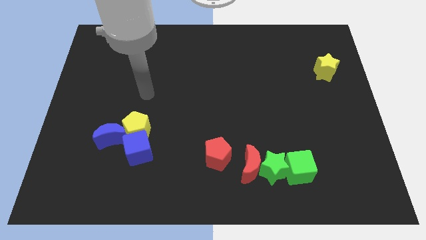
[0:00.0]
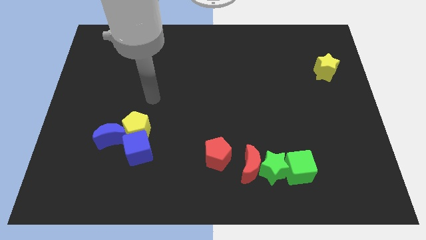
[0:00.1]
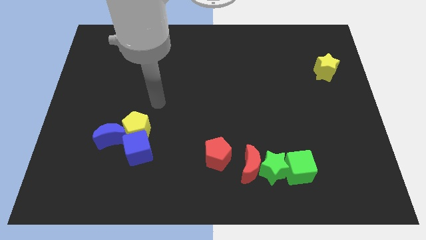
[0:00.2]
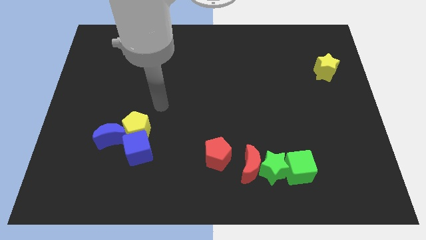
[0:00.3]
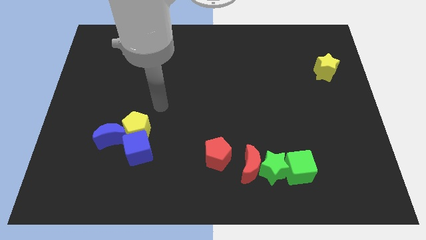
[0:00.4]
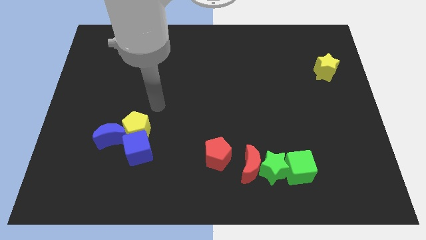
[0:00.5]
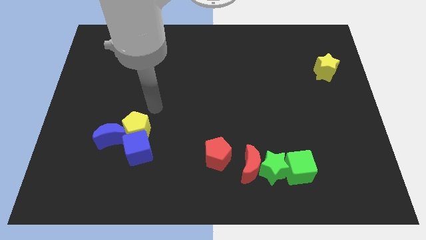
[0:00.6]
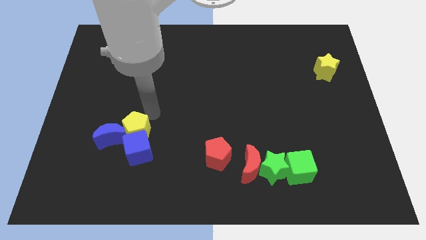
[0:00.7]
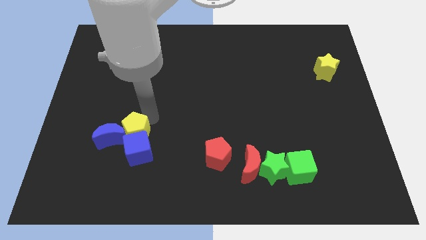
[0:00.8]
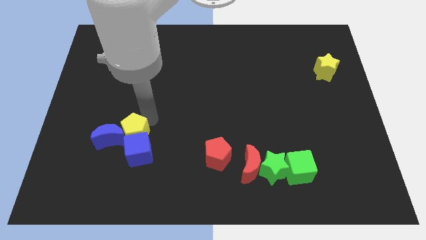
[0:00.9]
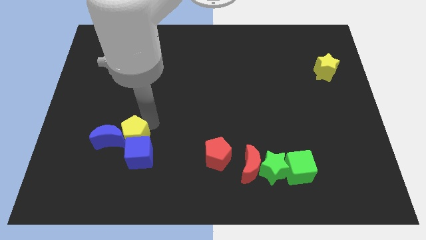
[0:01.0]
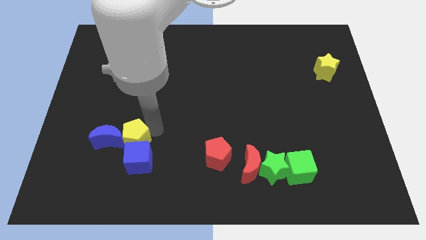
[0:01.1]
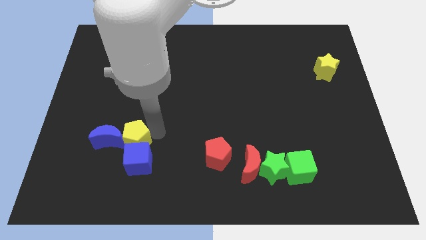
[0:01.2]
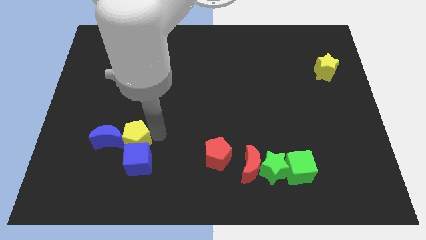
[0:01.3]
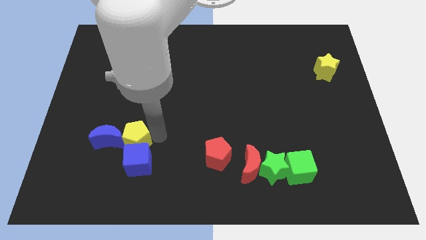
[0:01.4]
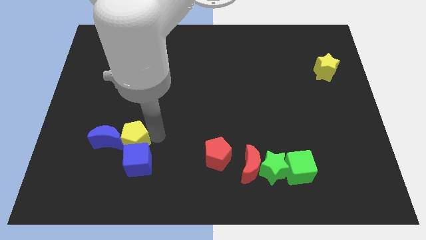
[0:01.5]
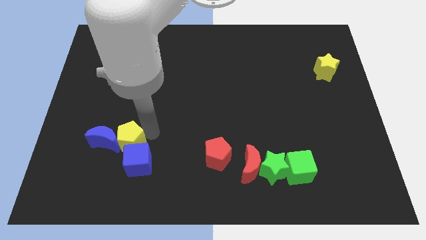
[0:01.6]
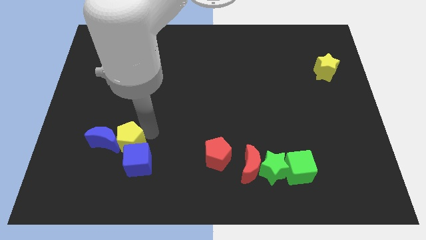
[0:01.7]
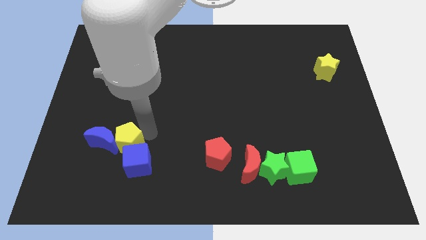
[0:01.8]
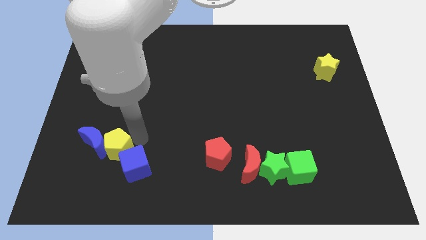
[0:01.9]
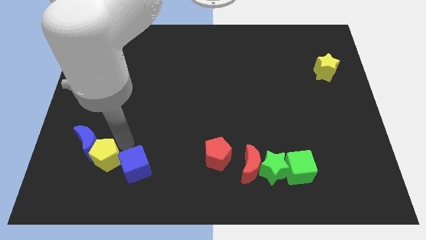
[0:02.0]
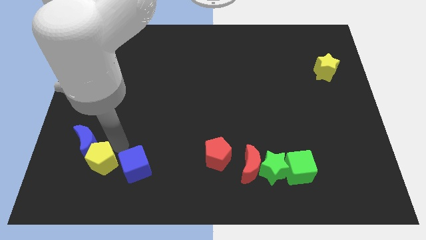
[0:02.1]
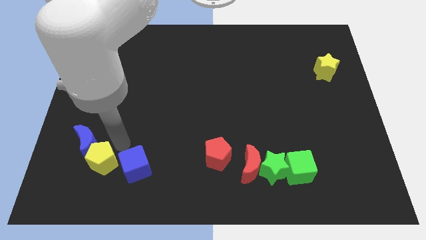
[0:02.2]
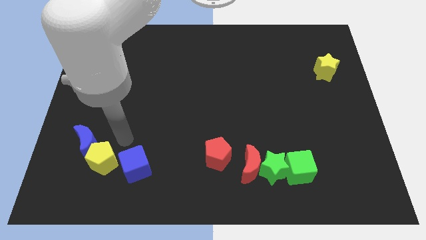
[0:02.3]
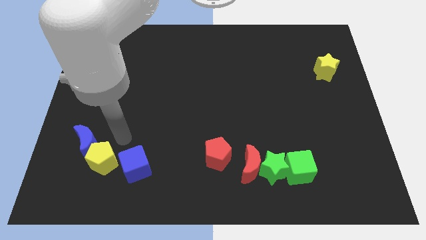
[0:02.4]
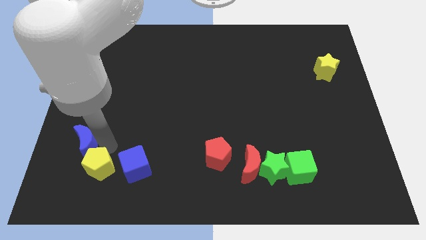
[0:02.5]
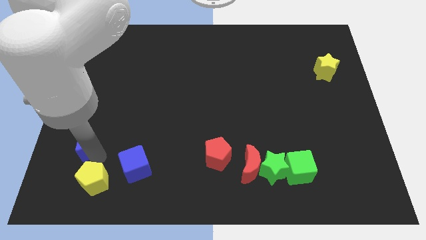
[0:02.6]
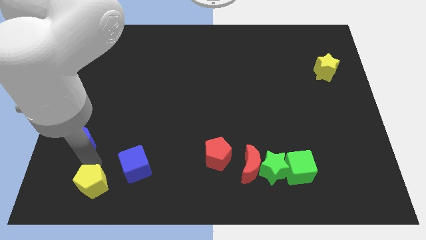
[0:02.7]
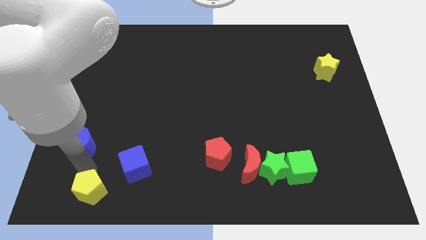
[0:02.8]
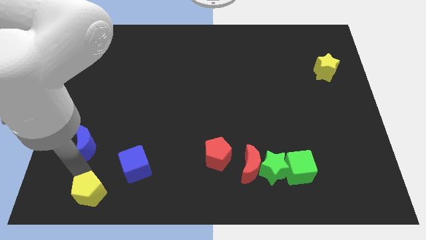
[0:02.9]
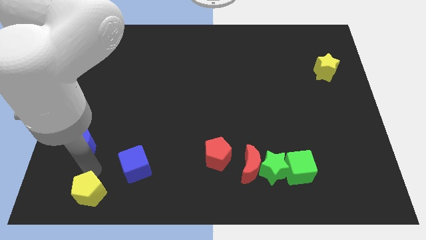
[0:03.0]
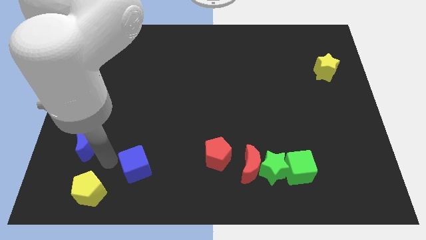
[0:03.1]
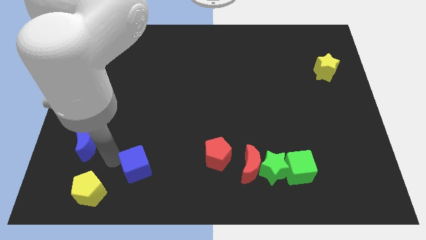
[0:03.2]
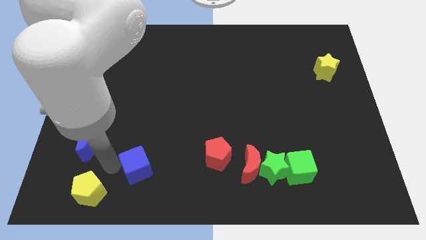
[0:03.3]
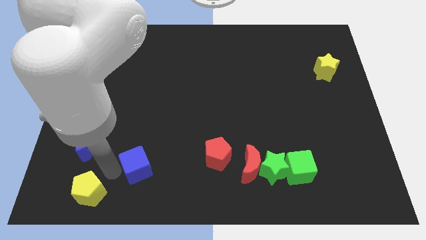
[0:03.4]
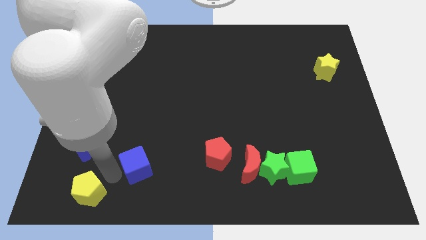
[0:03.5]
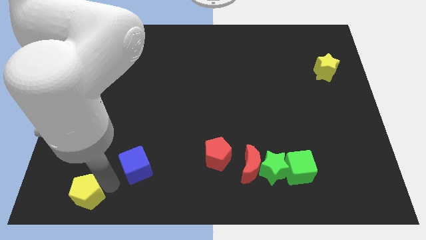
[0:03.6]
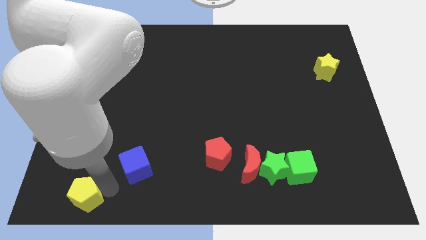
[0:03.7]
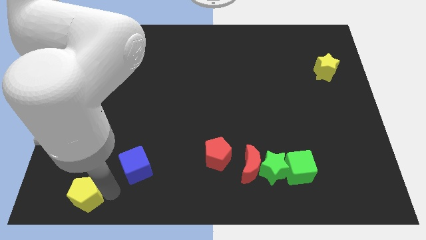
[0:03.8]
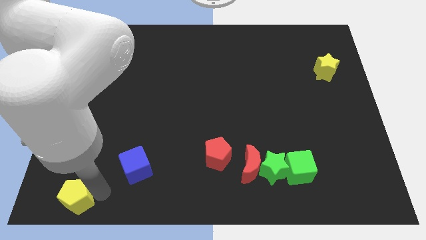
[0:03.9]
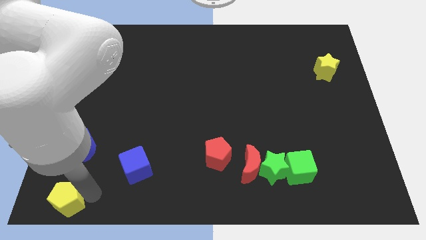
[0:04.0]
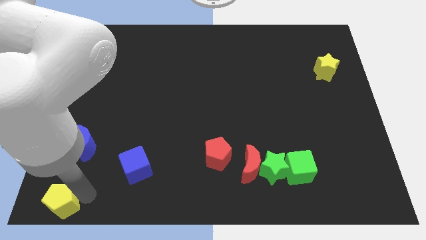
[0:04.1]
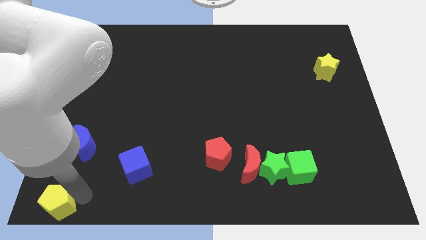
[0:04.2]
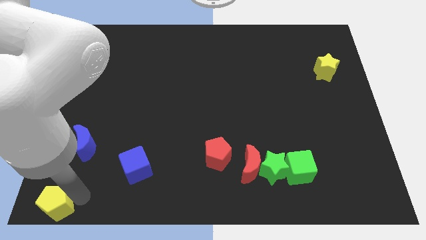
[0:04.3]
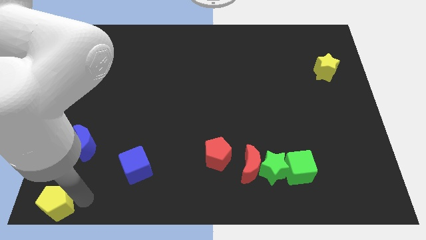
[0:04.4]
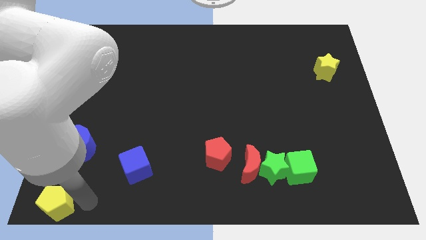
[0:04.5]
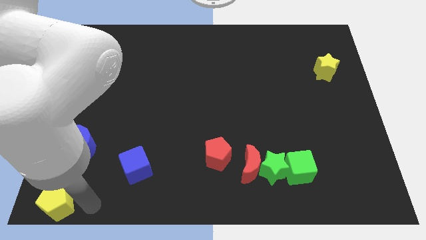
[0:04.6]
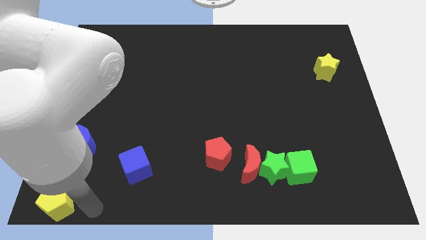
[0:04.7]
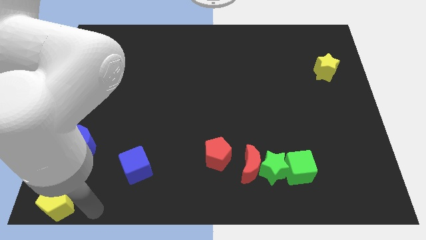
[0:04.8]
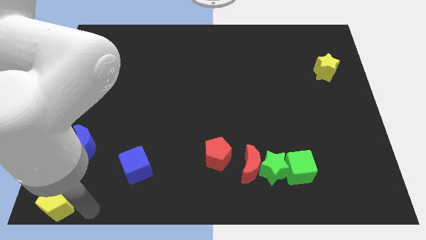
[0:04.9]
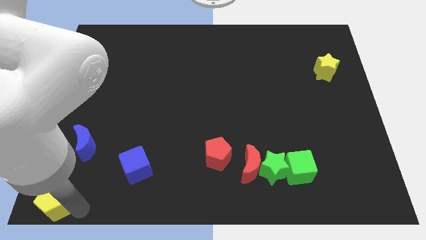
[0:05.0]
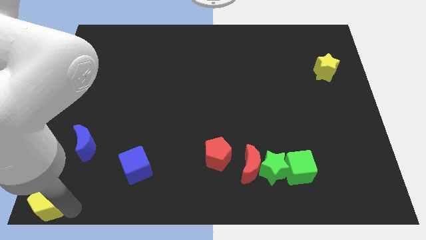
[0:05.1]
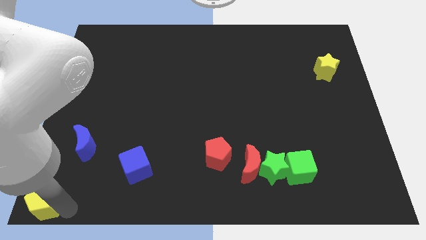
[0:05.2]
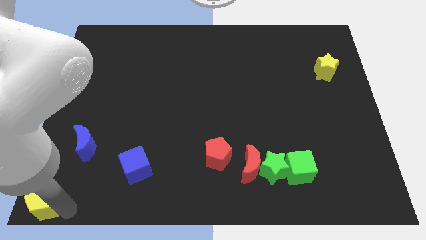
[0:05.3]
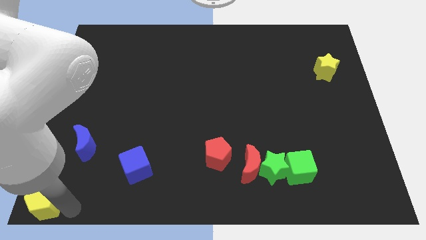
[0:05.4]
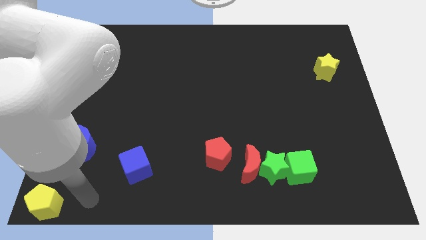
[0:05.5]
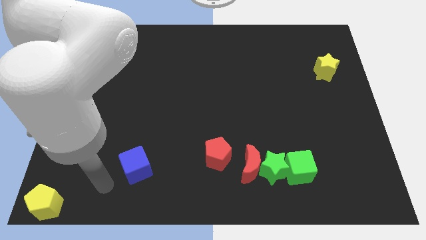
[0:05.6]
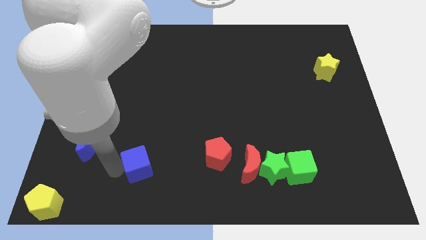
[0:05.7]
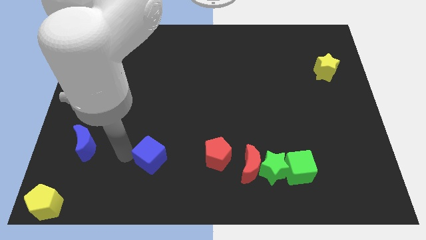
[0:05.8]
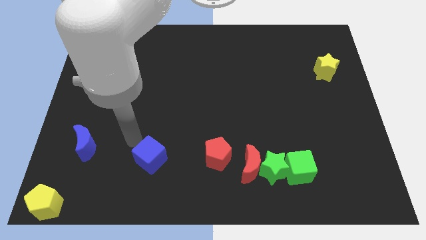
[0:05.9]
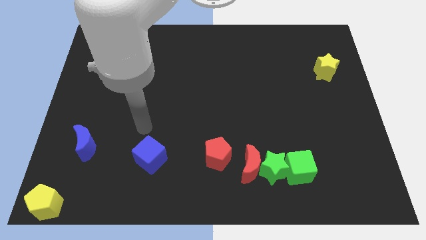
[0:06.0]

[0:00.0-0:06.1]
move the yellow pentagon to the bottom left corner

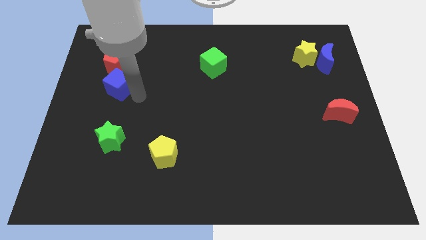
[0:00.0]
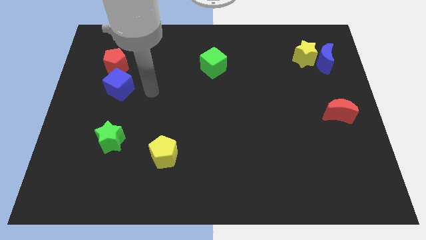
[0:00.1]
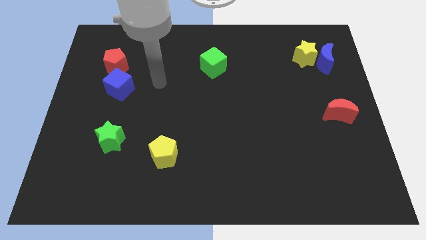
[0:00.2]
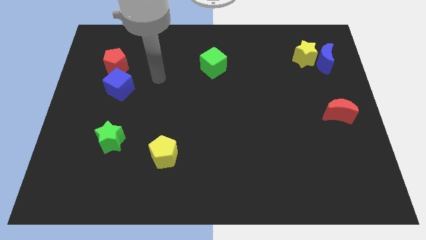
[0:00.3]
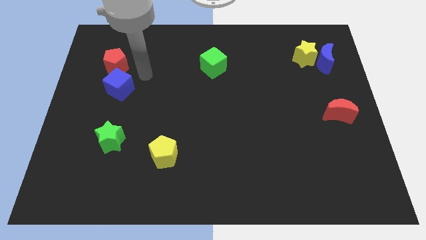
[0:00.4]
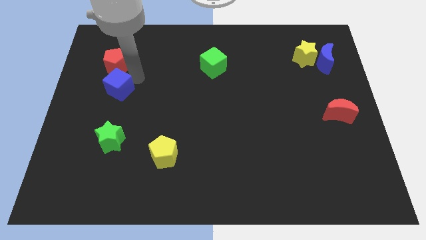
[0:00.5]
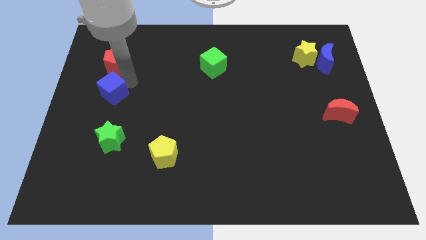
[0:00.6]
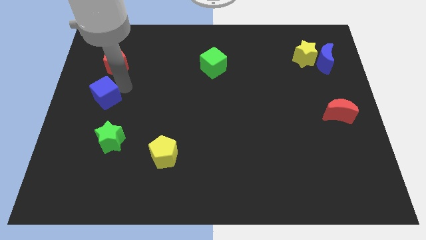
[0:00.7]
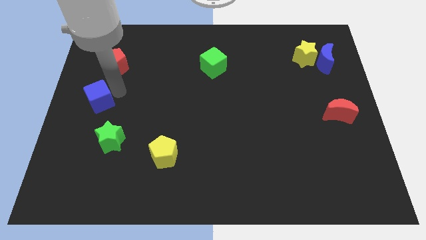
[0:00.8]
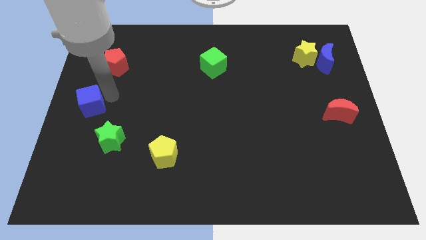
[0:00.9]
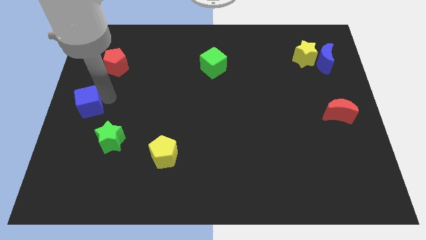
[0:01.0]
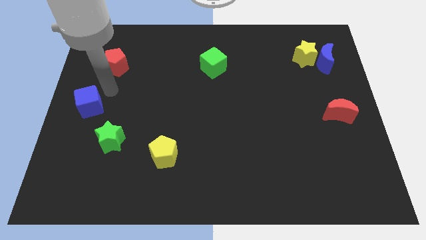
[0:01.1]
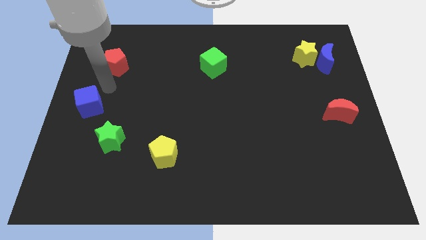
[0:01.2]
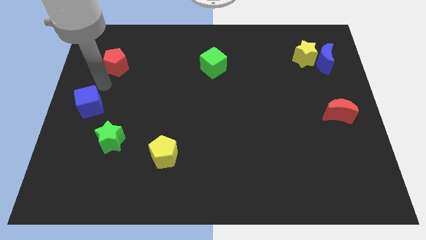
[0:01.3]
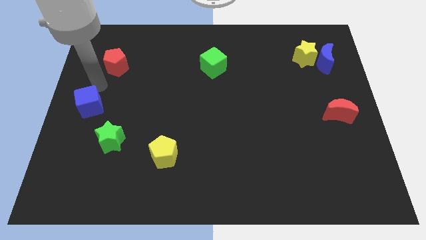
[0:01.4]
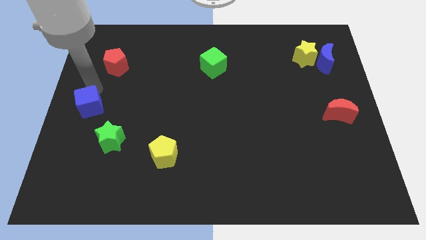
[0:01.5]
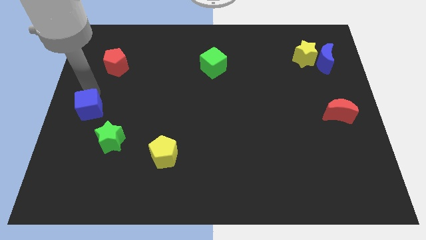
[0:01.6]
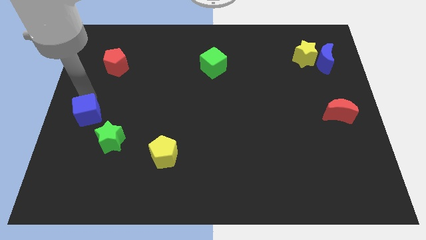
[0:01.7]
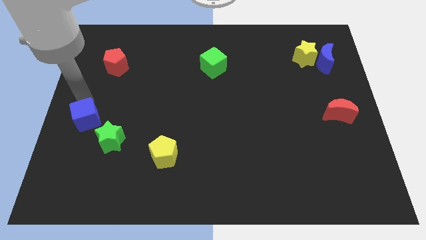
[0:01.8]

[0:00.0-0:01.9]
place the blue cube close to the green star

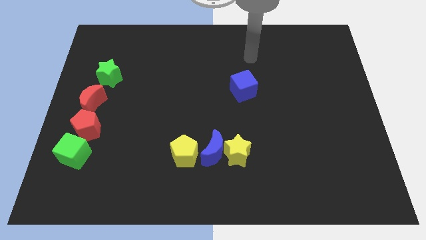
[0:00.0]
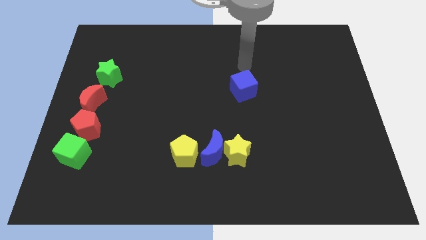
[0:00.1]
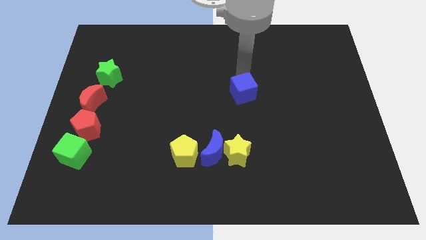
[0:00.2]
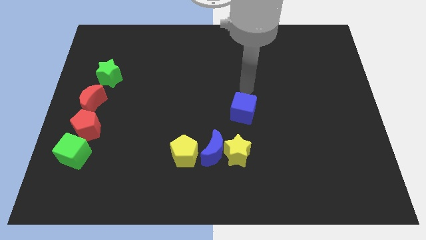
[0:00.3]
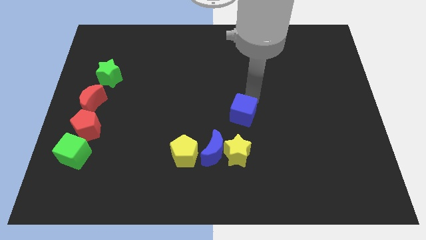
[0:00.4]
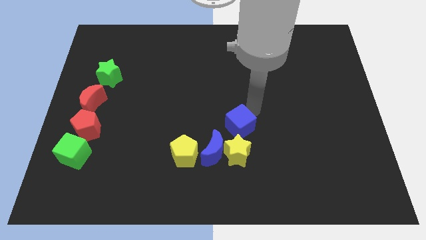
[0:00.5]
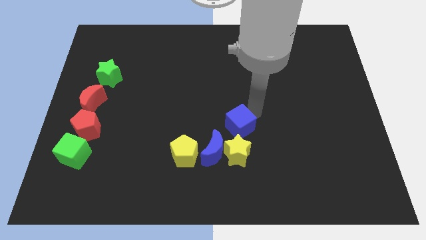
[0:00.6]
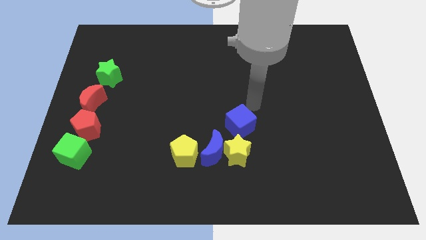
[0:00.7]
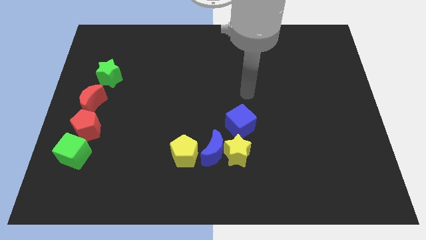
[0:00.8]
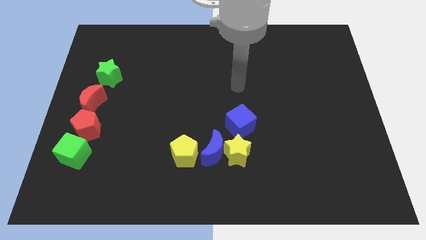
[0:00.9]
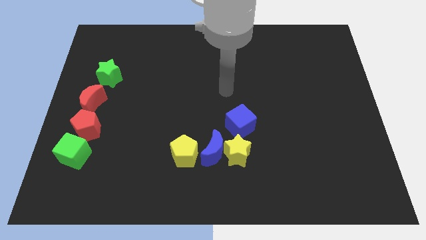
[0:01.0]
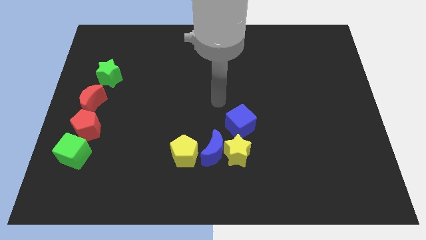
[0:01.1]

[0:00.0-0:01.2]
place the blue cube above the yellow star
